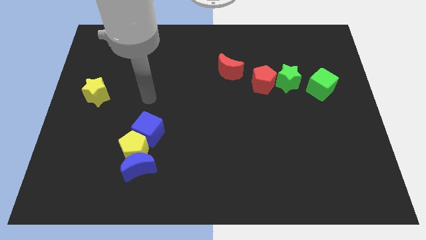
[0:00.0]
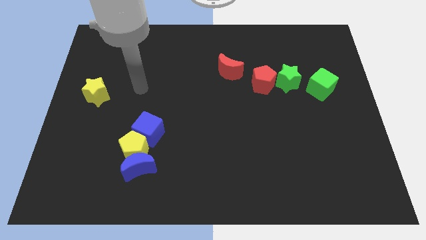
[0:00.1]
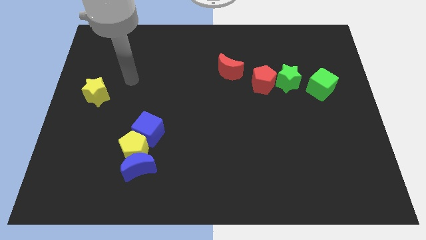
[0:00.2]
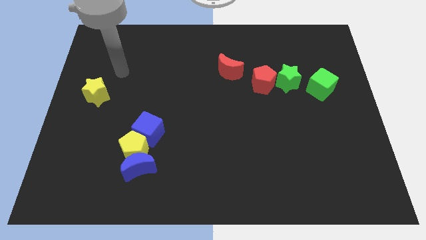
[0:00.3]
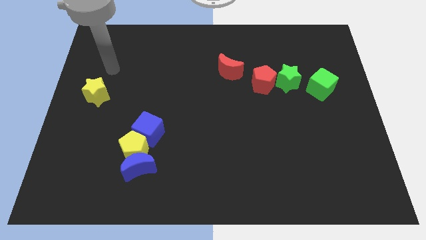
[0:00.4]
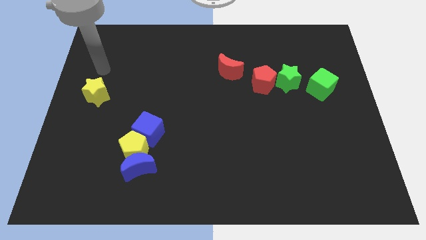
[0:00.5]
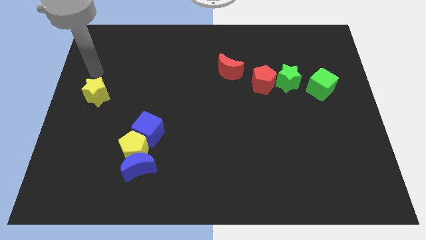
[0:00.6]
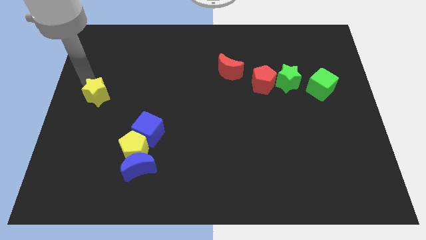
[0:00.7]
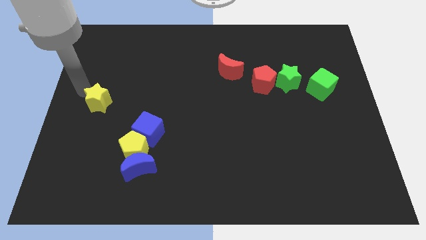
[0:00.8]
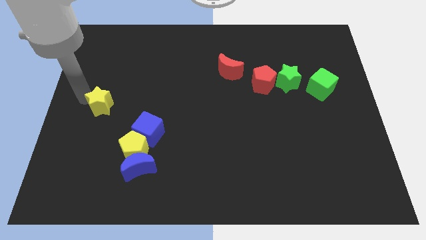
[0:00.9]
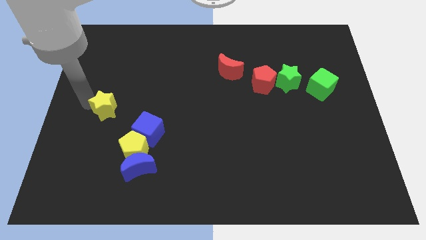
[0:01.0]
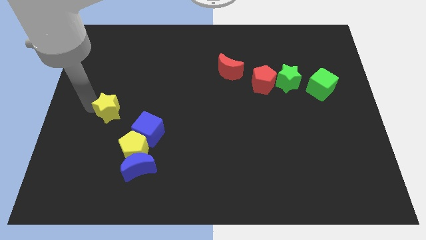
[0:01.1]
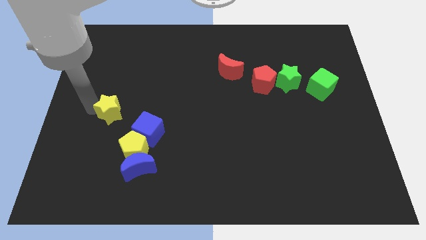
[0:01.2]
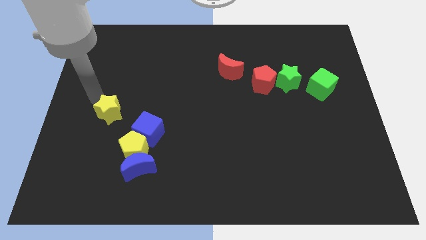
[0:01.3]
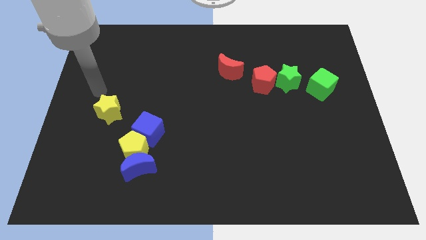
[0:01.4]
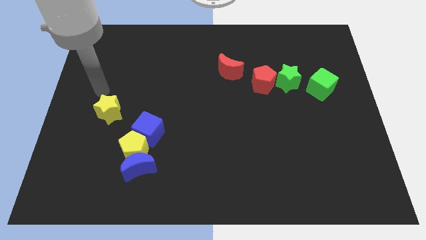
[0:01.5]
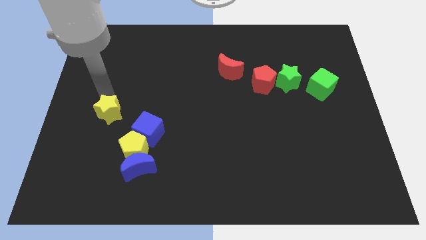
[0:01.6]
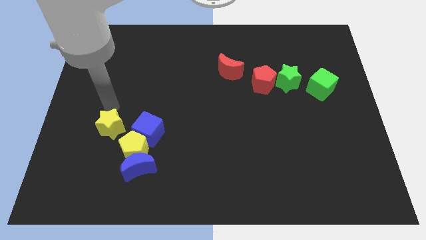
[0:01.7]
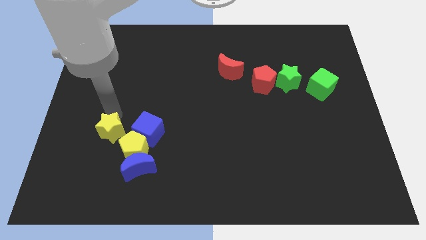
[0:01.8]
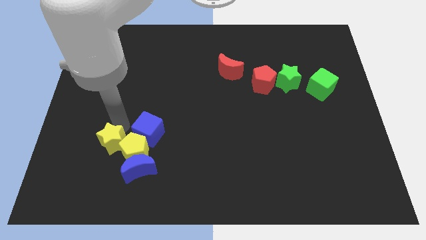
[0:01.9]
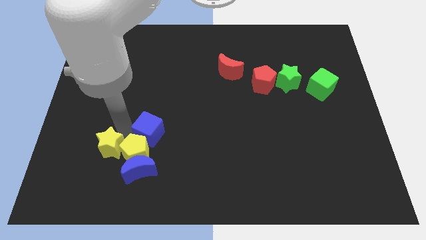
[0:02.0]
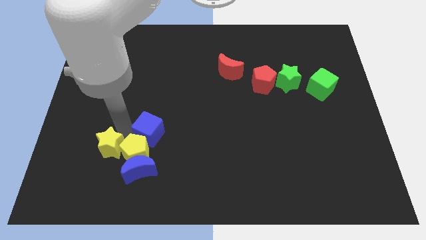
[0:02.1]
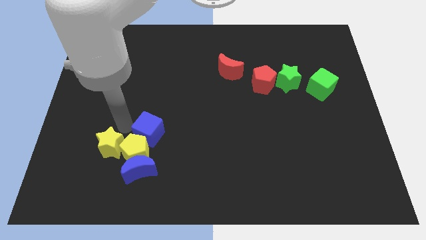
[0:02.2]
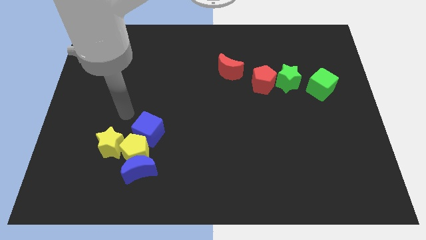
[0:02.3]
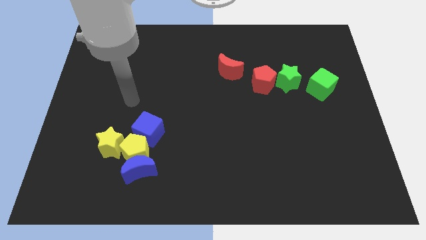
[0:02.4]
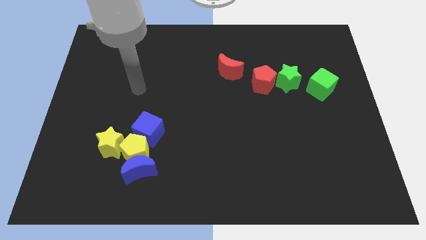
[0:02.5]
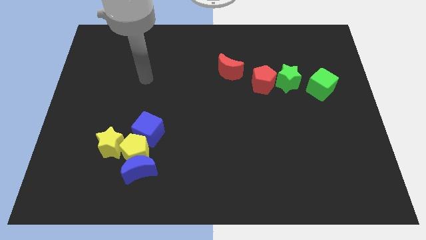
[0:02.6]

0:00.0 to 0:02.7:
take the yellow star close to the yellow pentagon

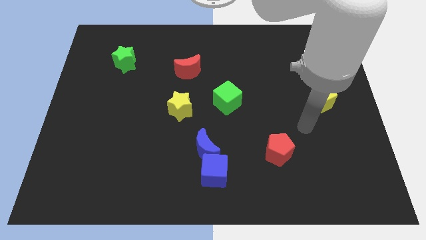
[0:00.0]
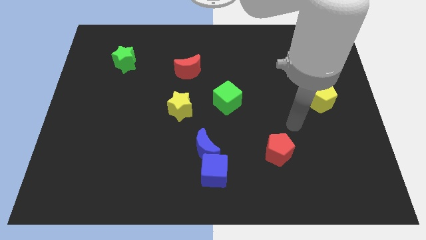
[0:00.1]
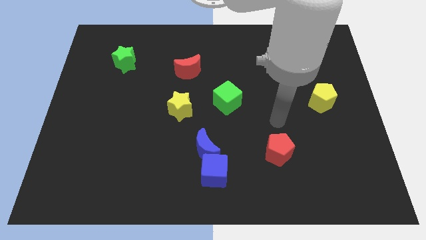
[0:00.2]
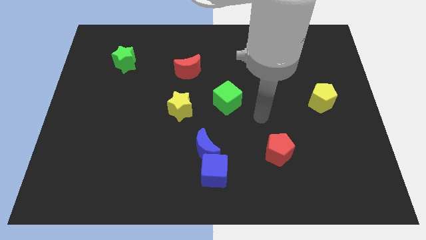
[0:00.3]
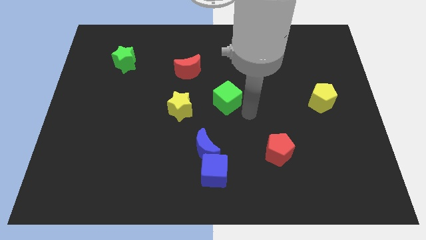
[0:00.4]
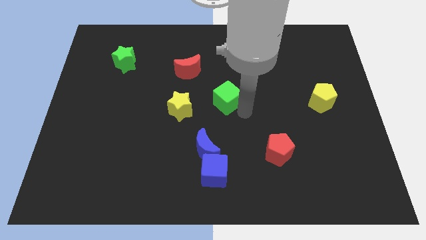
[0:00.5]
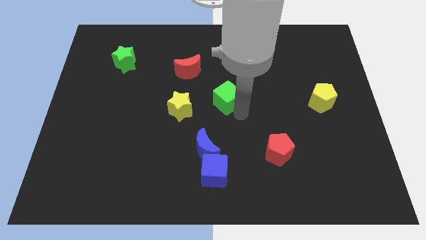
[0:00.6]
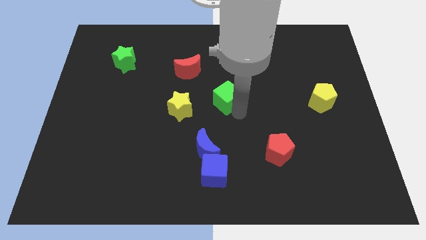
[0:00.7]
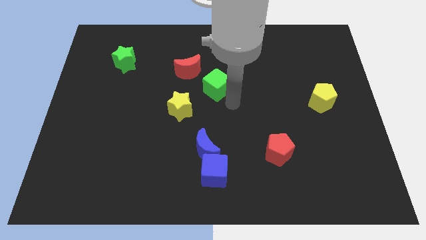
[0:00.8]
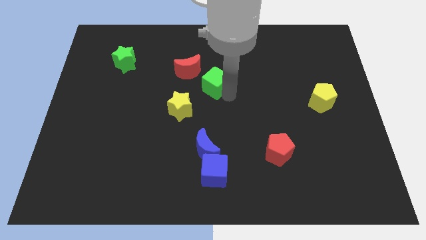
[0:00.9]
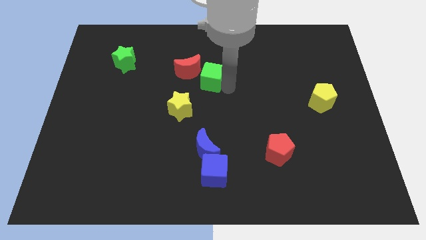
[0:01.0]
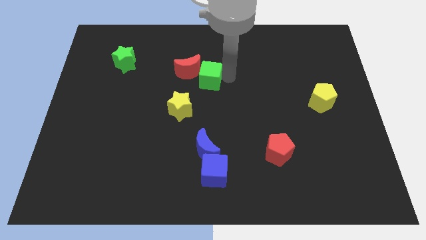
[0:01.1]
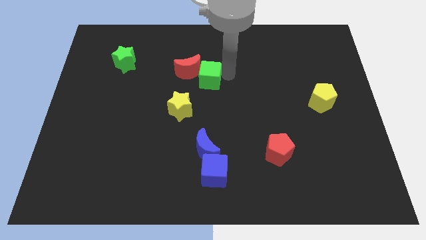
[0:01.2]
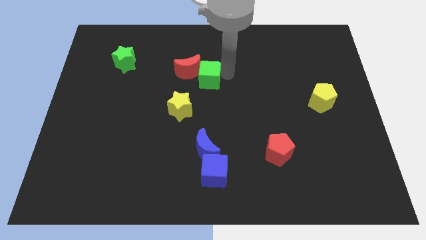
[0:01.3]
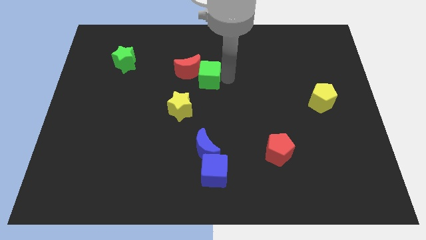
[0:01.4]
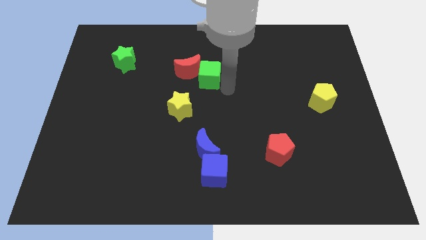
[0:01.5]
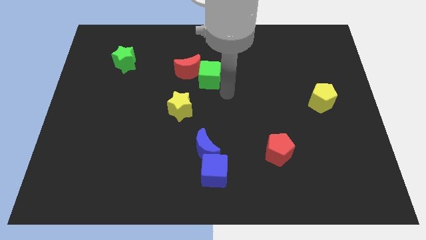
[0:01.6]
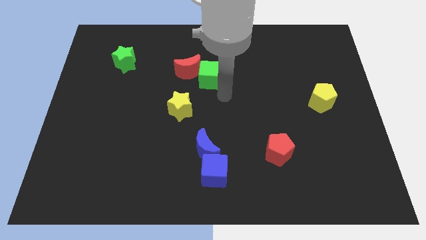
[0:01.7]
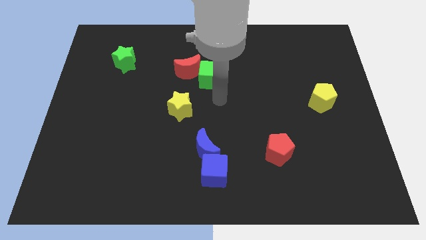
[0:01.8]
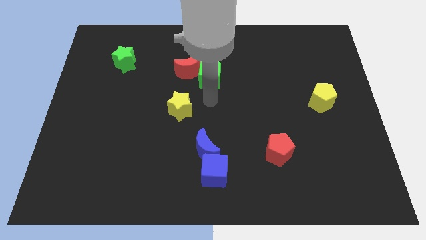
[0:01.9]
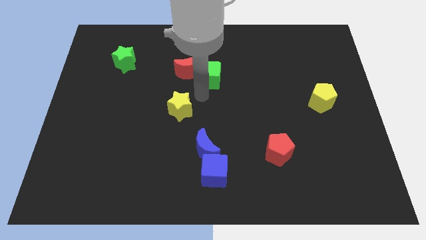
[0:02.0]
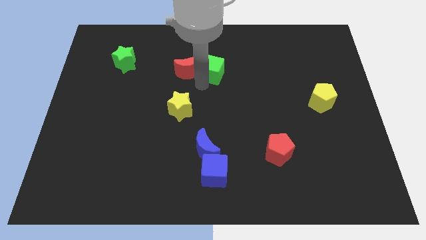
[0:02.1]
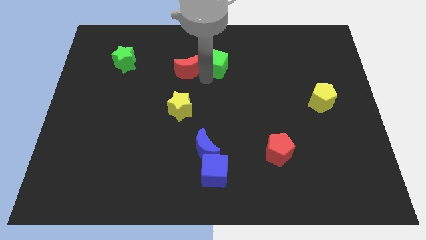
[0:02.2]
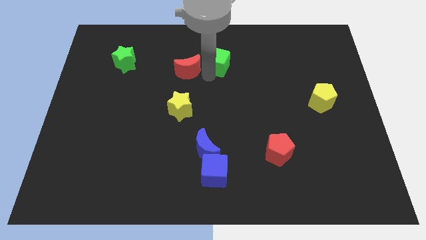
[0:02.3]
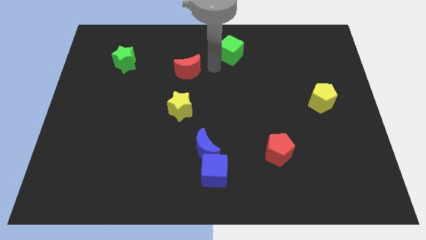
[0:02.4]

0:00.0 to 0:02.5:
push the green cube to the top center of the board

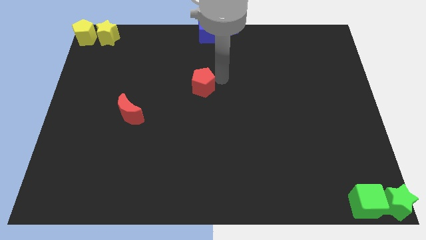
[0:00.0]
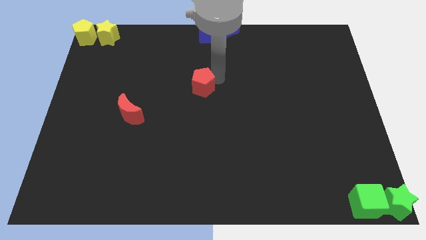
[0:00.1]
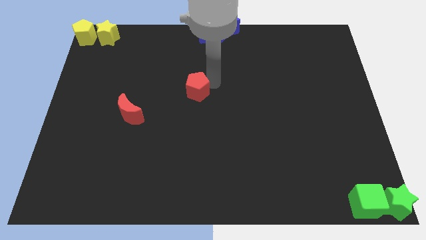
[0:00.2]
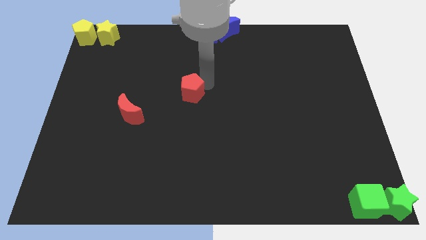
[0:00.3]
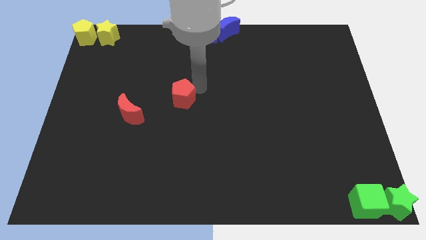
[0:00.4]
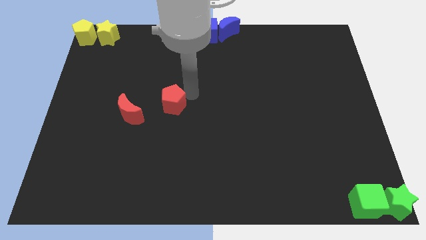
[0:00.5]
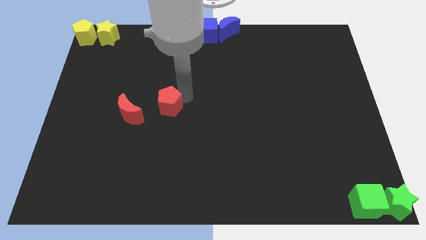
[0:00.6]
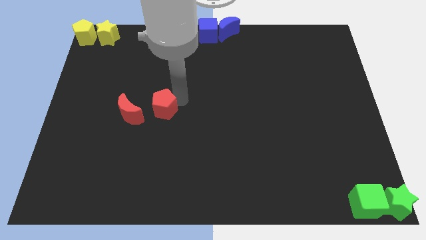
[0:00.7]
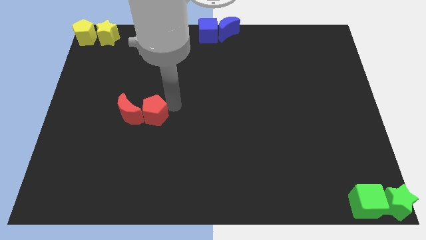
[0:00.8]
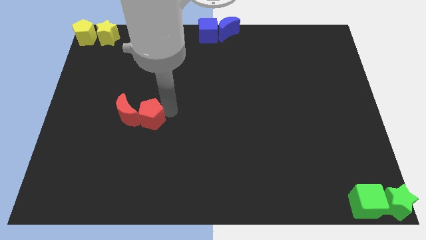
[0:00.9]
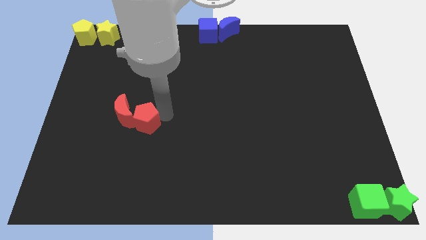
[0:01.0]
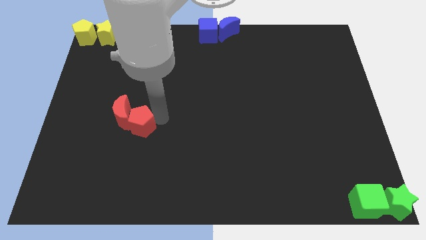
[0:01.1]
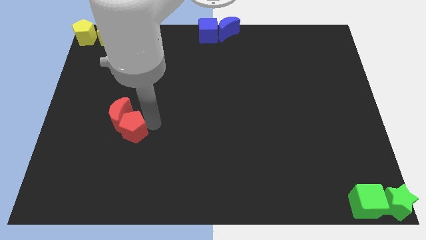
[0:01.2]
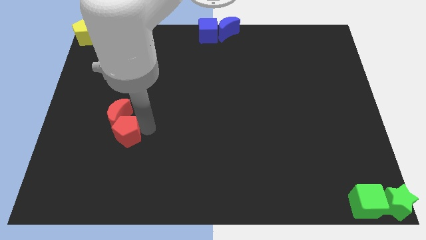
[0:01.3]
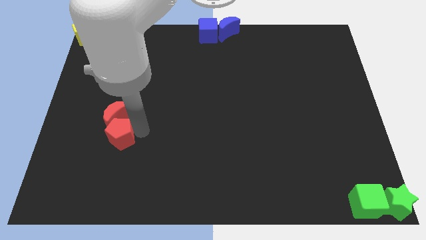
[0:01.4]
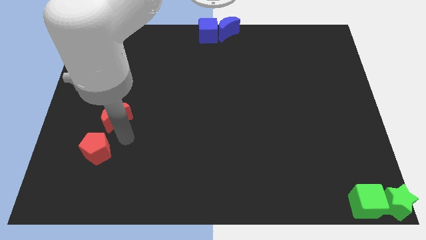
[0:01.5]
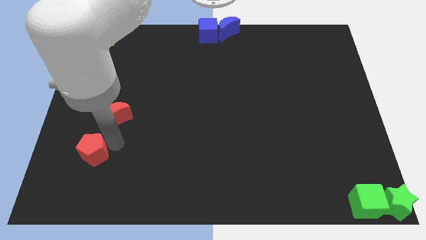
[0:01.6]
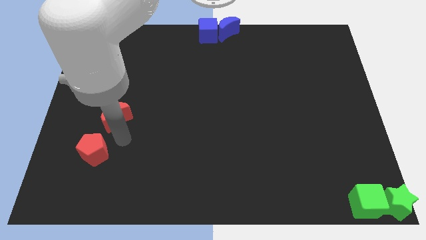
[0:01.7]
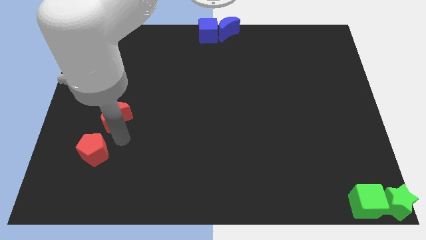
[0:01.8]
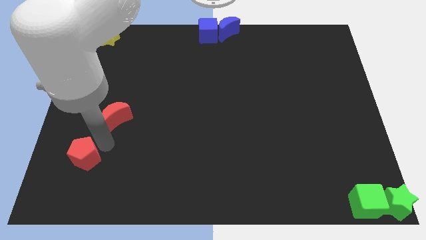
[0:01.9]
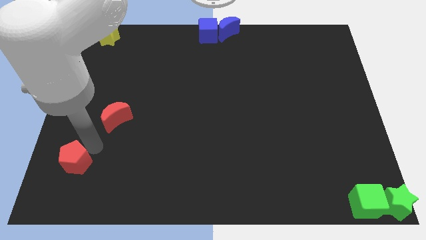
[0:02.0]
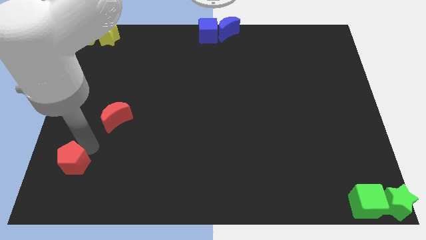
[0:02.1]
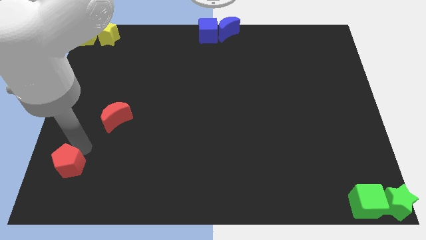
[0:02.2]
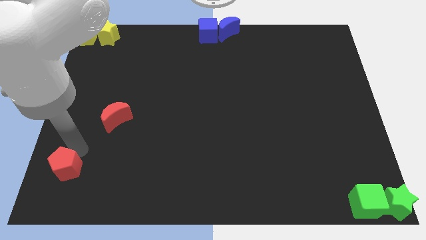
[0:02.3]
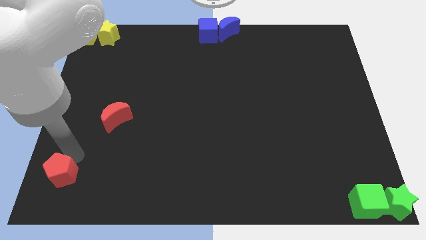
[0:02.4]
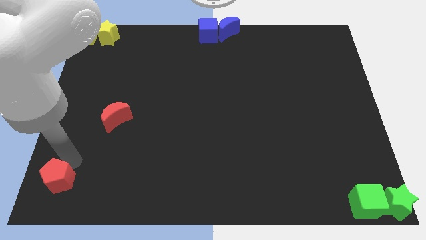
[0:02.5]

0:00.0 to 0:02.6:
push the red pentagon towards the bottom left corner

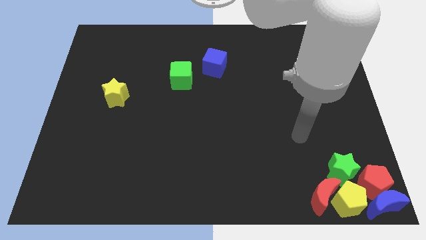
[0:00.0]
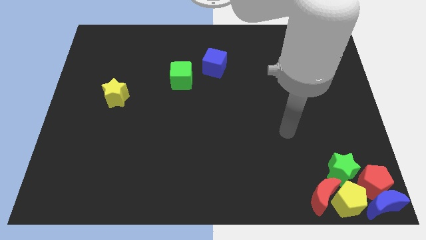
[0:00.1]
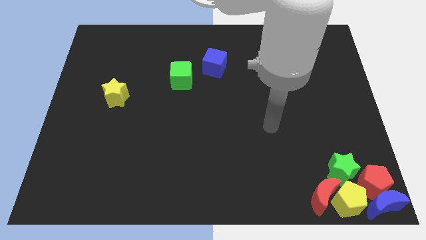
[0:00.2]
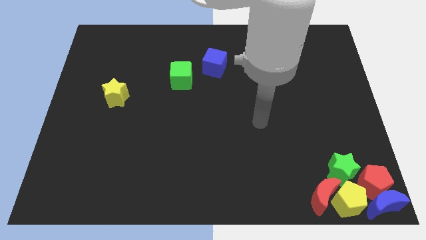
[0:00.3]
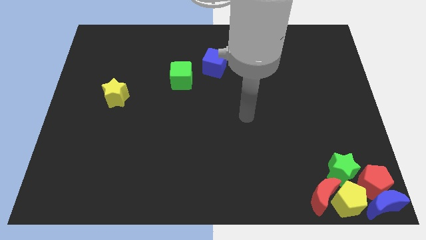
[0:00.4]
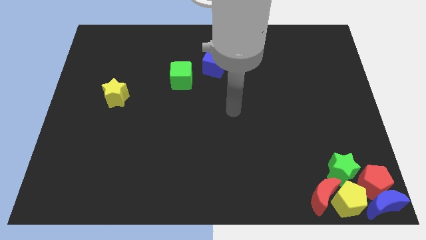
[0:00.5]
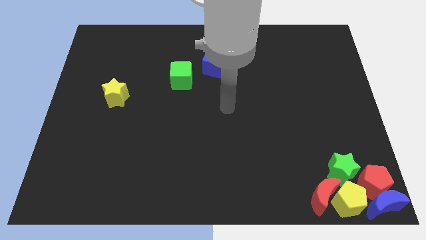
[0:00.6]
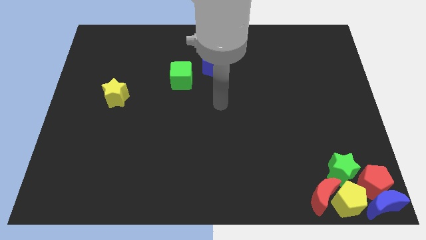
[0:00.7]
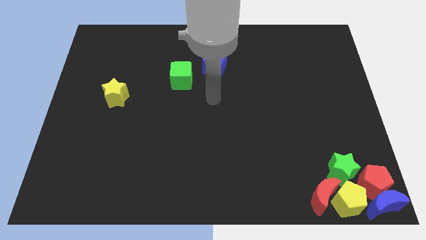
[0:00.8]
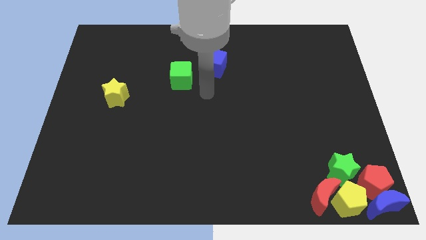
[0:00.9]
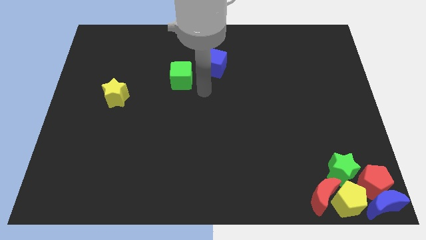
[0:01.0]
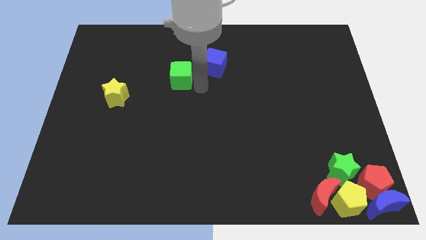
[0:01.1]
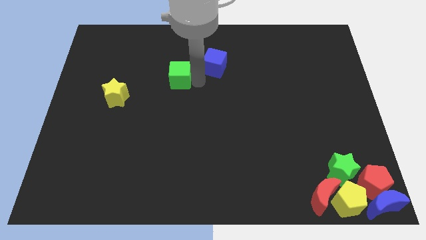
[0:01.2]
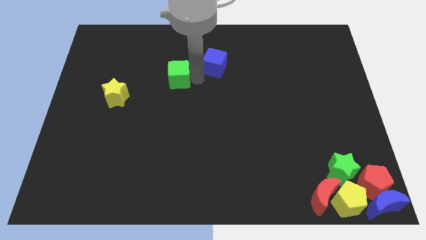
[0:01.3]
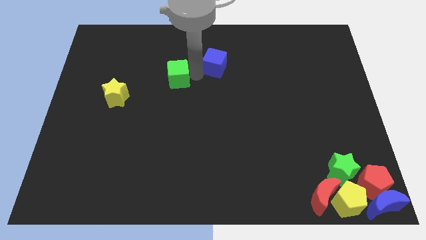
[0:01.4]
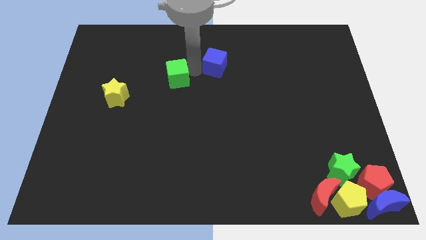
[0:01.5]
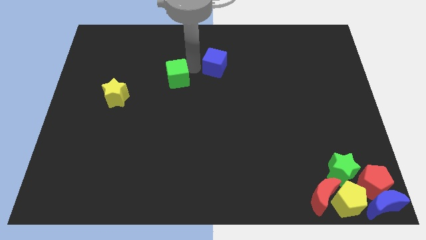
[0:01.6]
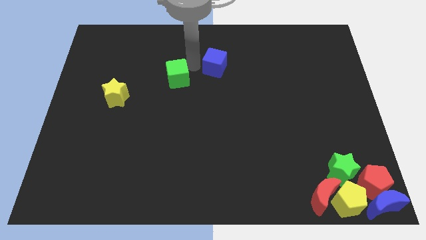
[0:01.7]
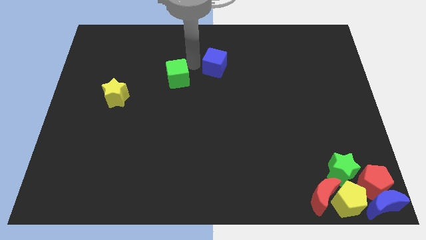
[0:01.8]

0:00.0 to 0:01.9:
move your arm into the green cube
